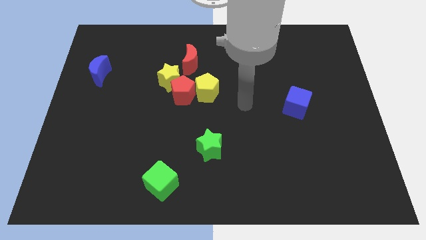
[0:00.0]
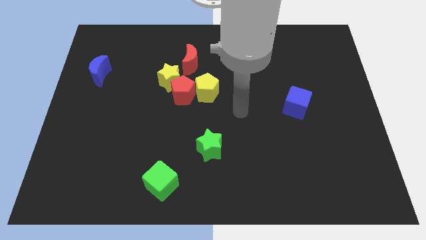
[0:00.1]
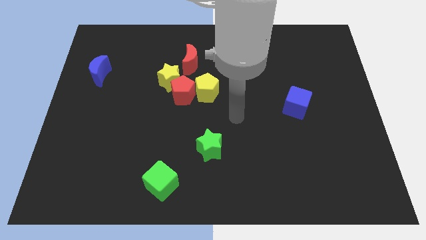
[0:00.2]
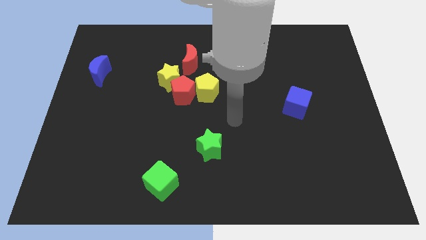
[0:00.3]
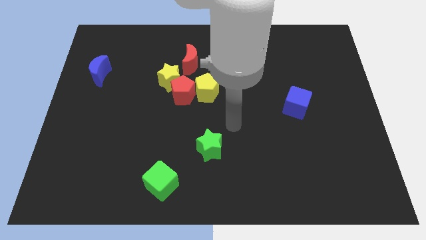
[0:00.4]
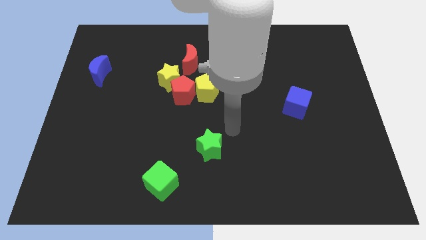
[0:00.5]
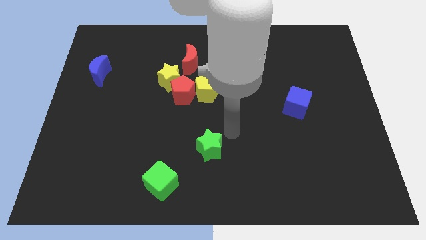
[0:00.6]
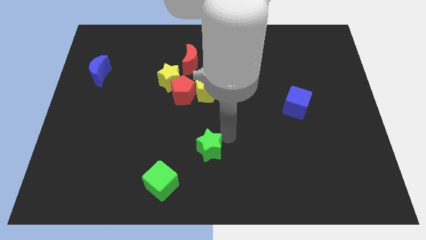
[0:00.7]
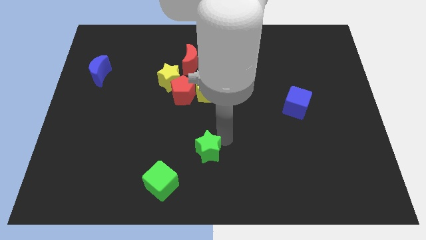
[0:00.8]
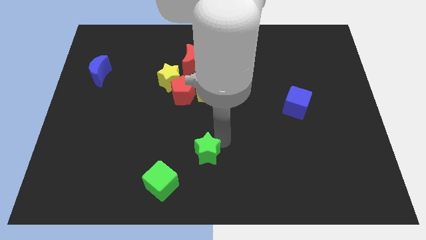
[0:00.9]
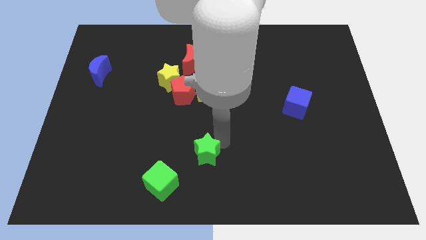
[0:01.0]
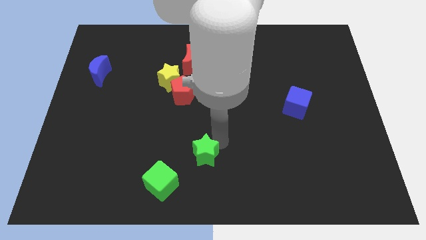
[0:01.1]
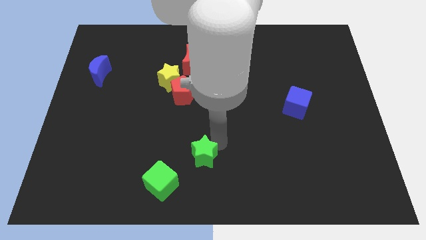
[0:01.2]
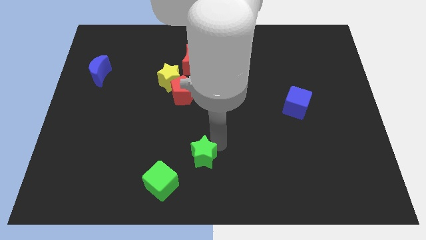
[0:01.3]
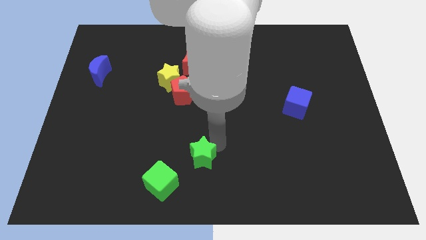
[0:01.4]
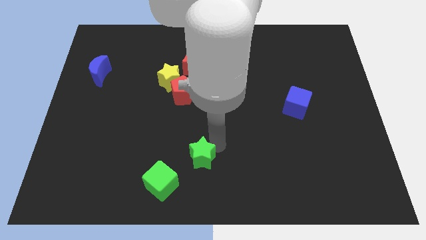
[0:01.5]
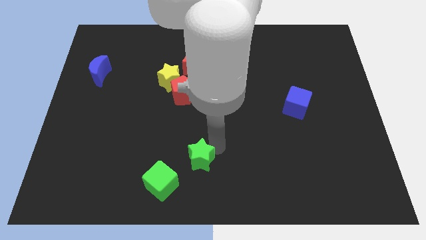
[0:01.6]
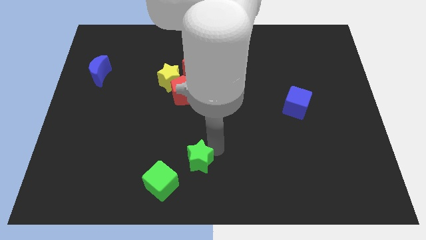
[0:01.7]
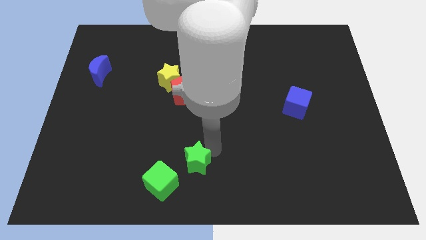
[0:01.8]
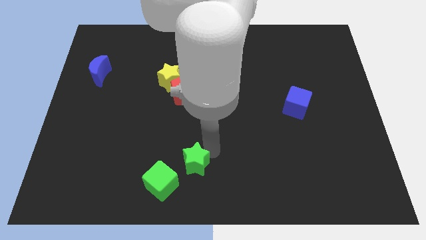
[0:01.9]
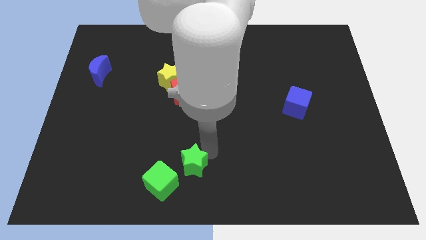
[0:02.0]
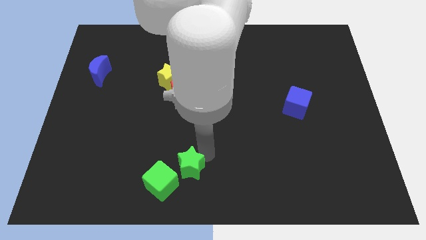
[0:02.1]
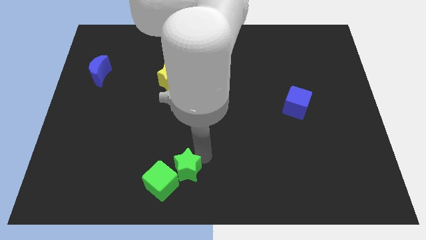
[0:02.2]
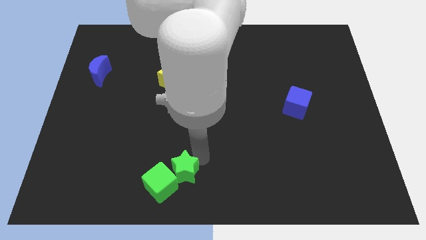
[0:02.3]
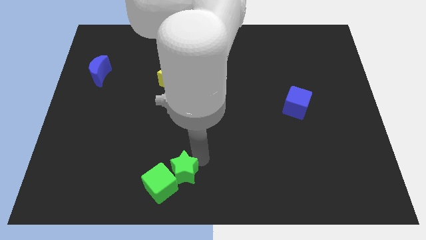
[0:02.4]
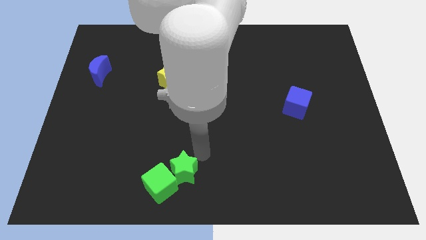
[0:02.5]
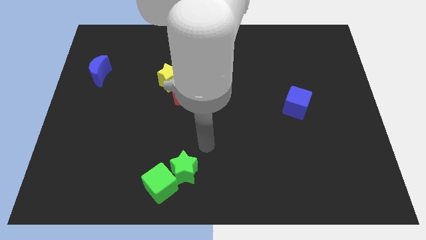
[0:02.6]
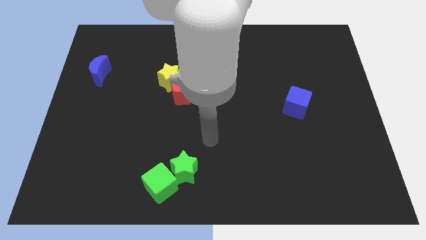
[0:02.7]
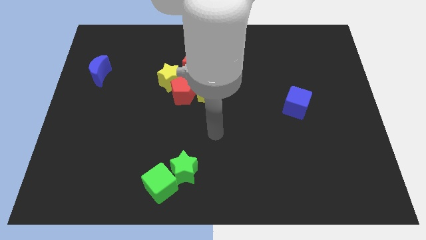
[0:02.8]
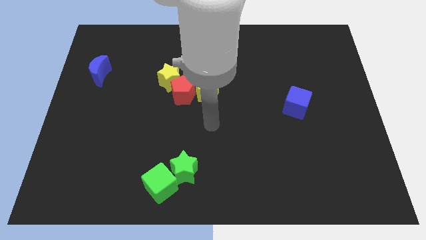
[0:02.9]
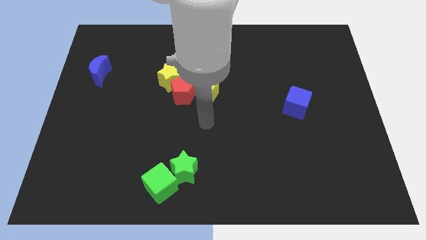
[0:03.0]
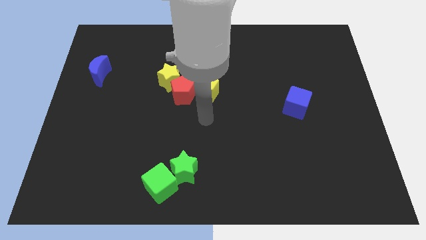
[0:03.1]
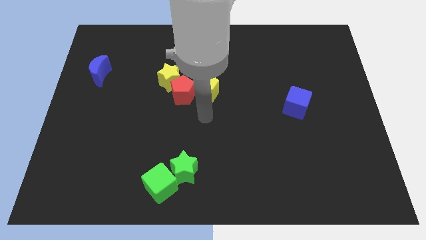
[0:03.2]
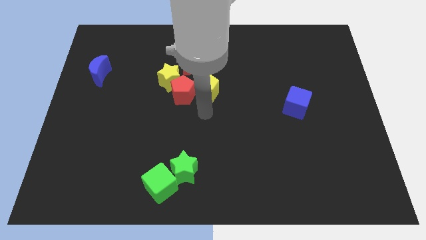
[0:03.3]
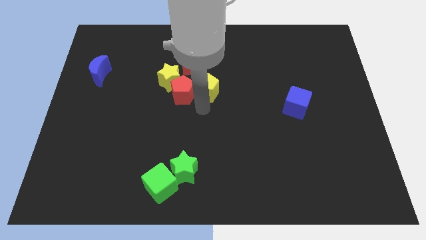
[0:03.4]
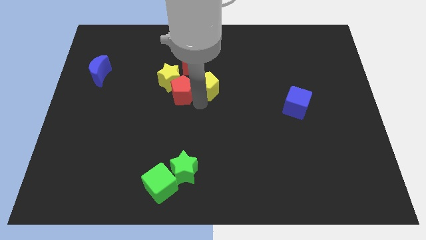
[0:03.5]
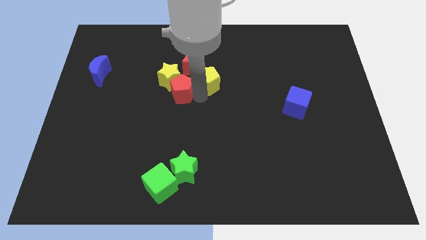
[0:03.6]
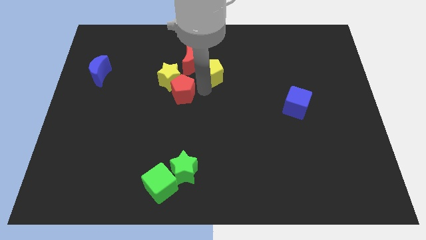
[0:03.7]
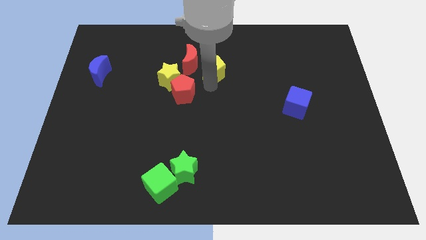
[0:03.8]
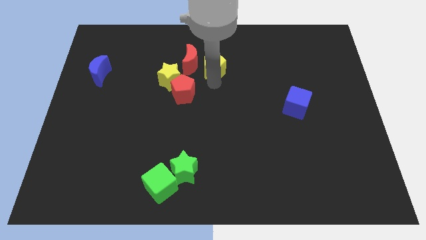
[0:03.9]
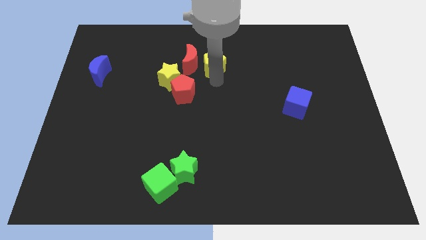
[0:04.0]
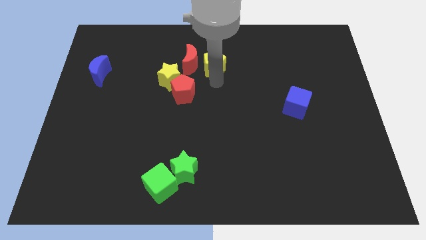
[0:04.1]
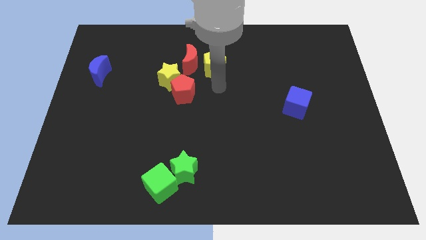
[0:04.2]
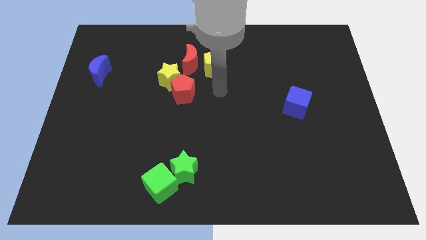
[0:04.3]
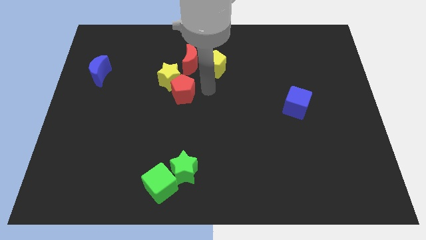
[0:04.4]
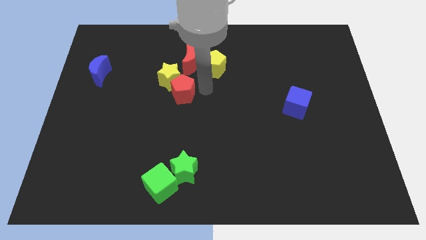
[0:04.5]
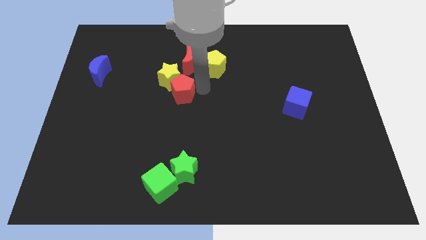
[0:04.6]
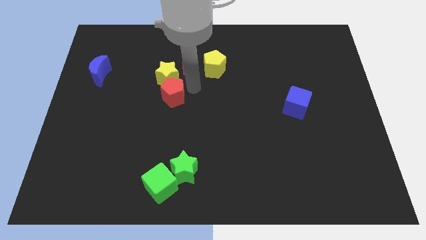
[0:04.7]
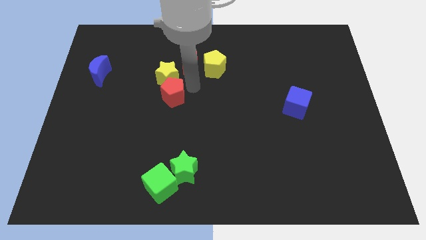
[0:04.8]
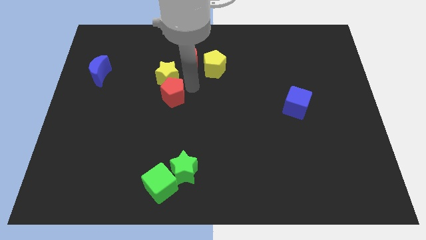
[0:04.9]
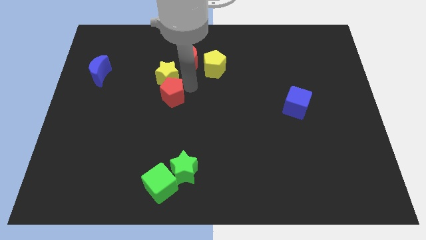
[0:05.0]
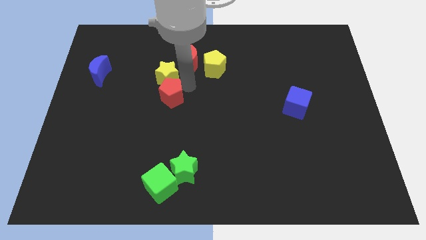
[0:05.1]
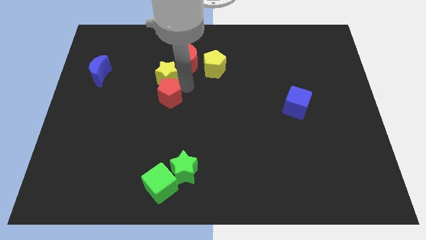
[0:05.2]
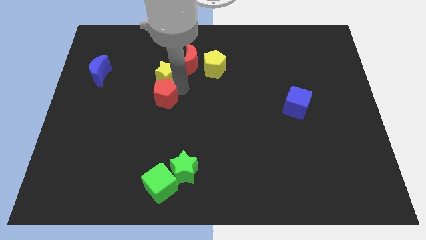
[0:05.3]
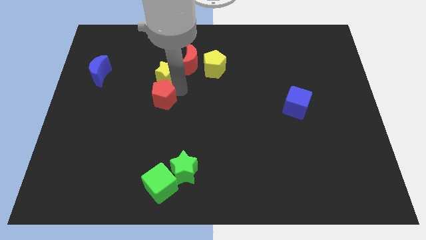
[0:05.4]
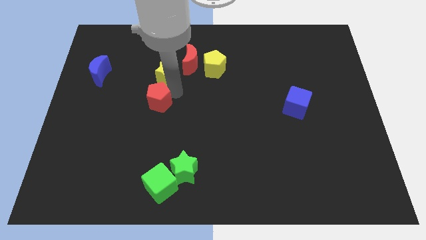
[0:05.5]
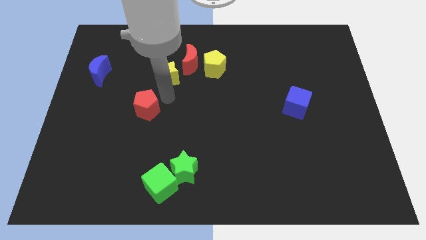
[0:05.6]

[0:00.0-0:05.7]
separate the green blocks from other blocks

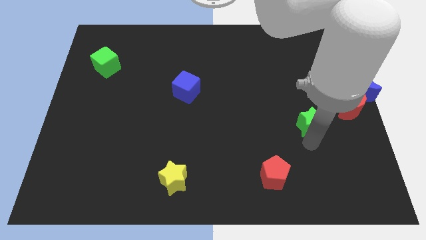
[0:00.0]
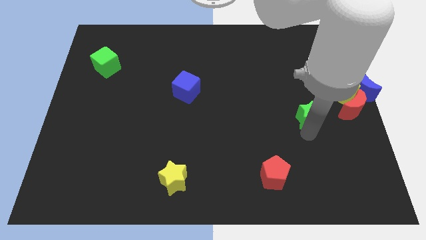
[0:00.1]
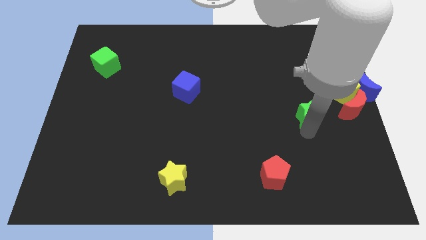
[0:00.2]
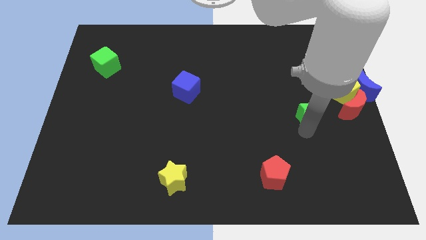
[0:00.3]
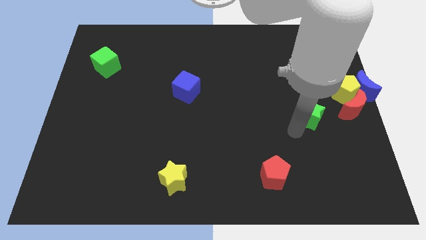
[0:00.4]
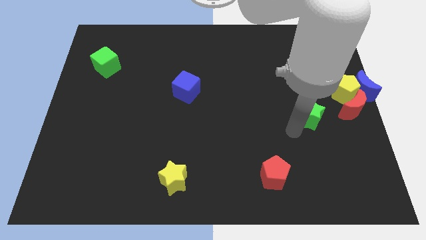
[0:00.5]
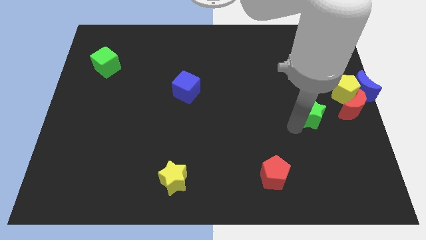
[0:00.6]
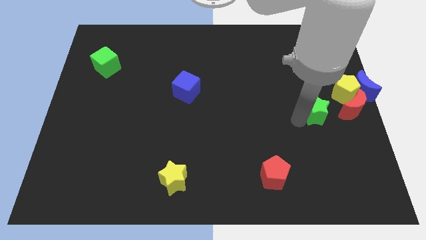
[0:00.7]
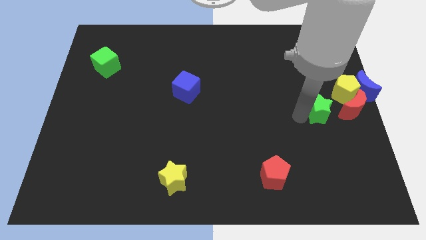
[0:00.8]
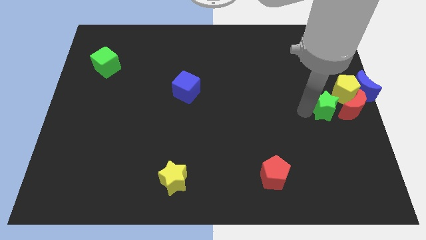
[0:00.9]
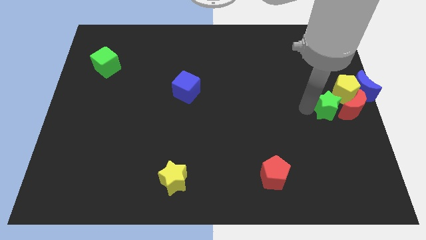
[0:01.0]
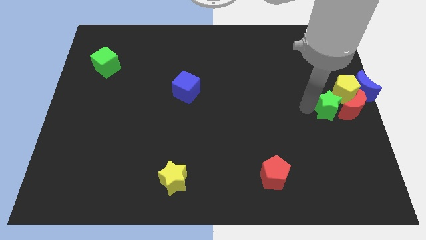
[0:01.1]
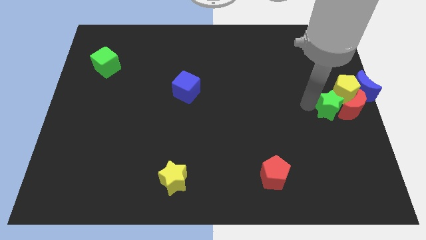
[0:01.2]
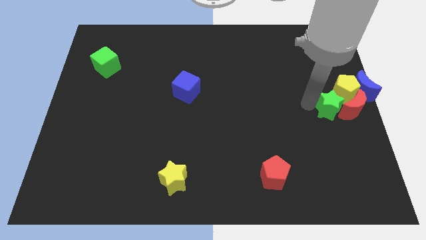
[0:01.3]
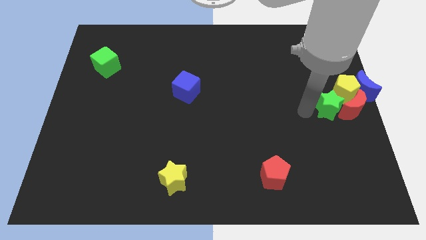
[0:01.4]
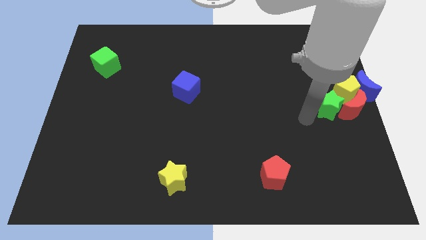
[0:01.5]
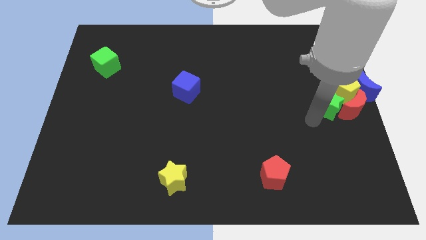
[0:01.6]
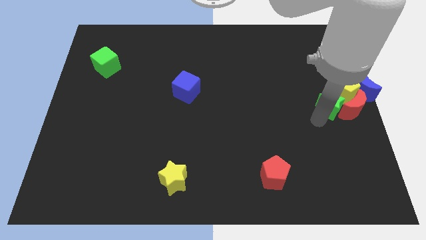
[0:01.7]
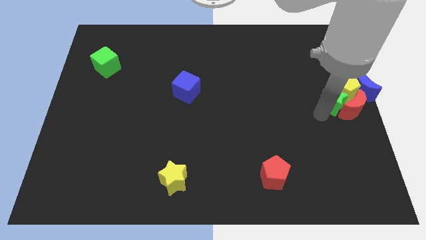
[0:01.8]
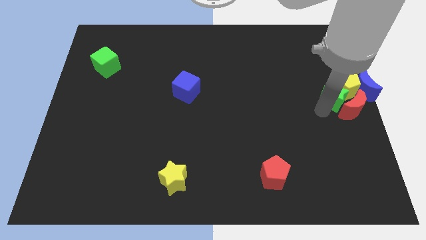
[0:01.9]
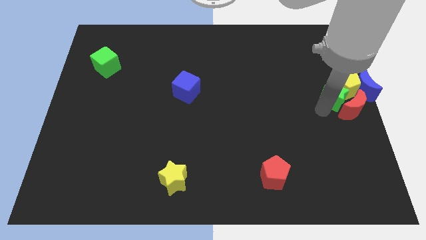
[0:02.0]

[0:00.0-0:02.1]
push the green star into yellow pentagon

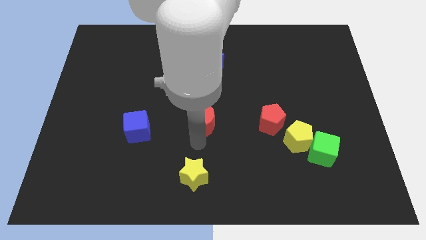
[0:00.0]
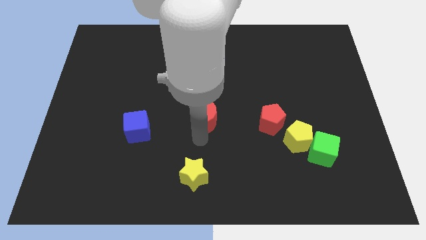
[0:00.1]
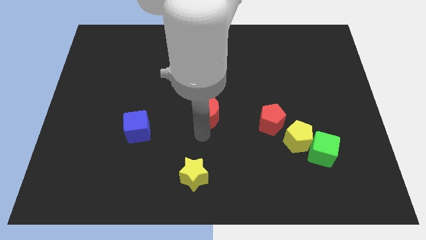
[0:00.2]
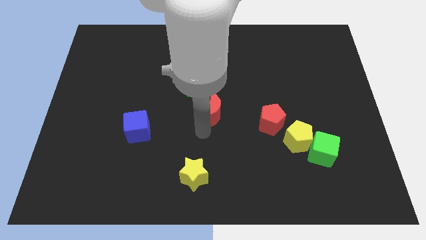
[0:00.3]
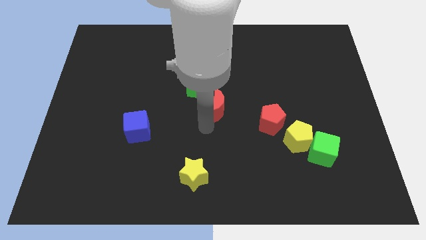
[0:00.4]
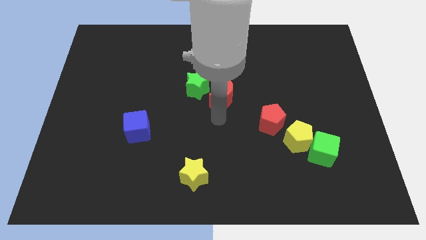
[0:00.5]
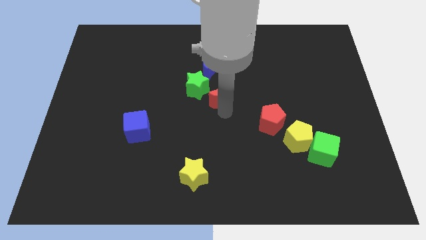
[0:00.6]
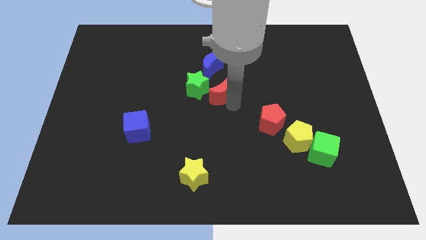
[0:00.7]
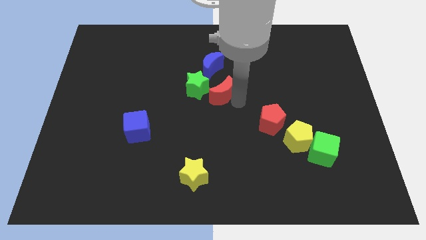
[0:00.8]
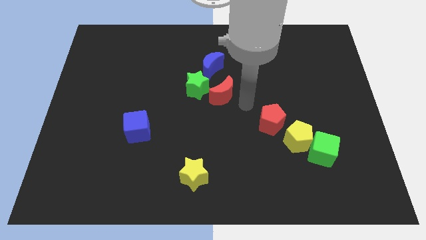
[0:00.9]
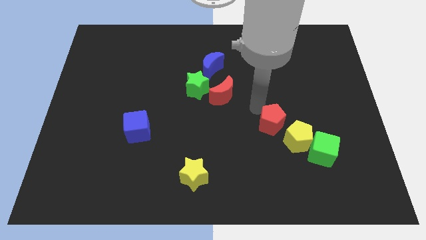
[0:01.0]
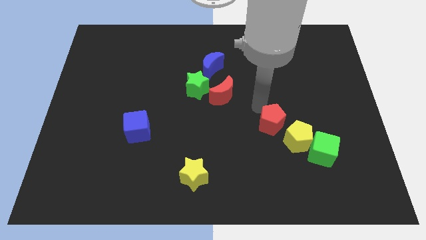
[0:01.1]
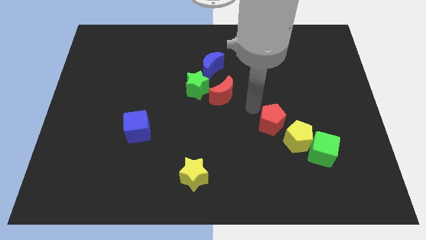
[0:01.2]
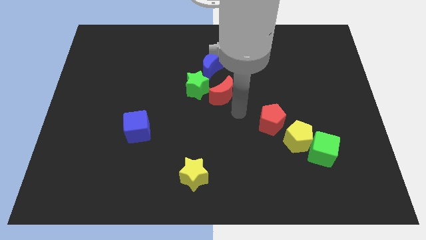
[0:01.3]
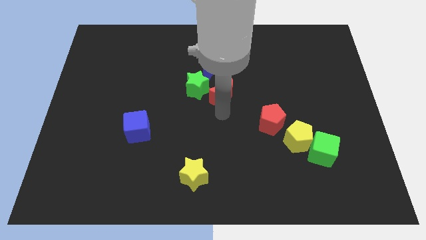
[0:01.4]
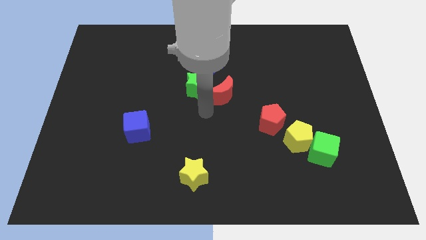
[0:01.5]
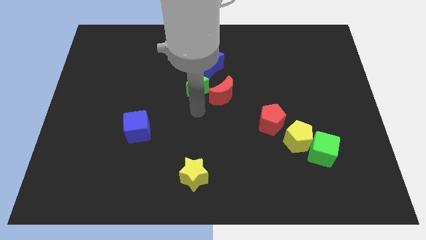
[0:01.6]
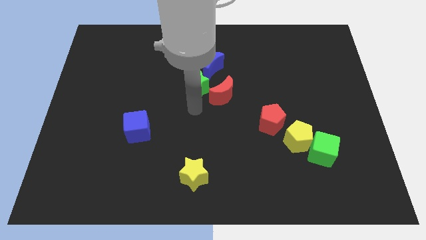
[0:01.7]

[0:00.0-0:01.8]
drag the red moon to the right of the green star
